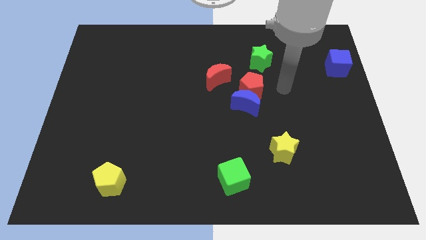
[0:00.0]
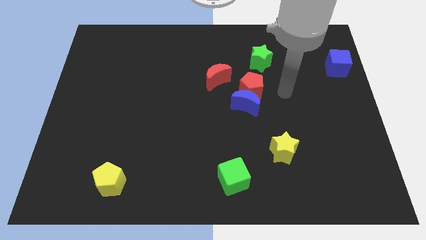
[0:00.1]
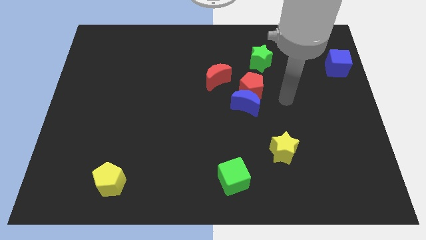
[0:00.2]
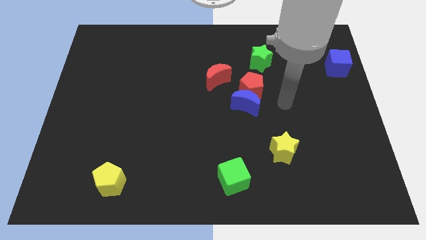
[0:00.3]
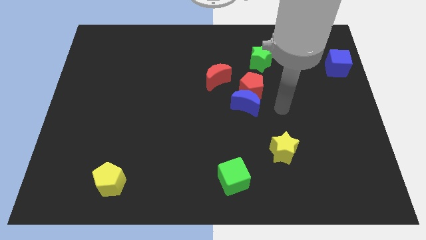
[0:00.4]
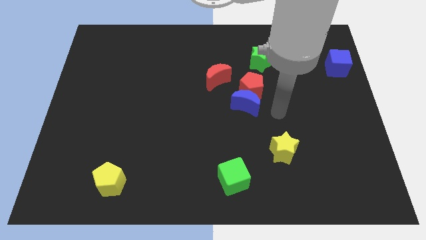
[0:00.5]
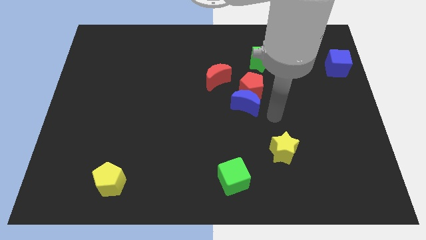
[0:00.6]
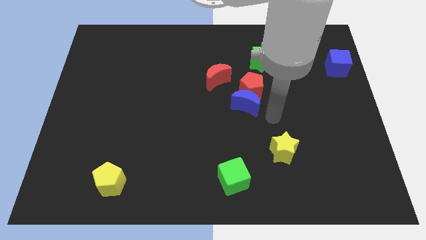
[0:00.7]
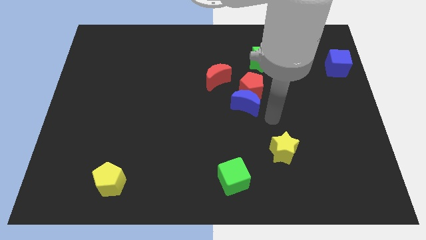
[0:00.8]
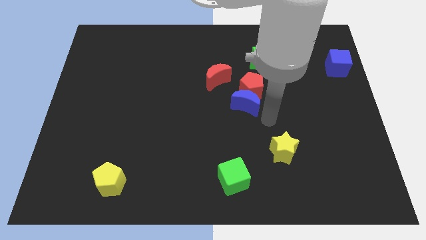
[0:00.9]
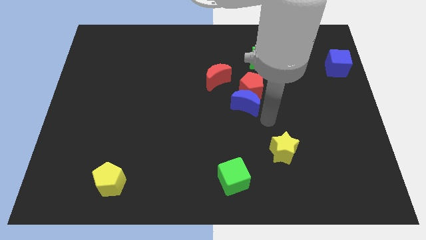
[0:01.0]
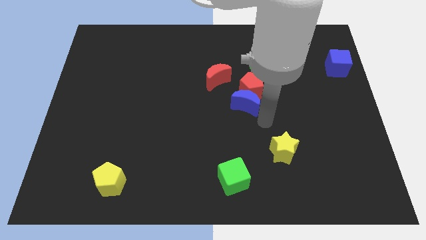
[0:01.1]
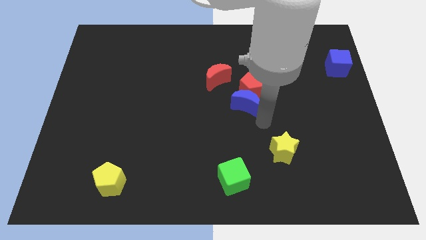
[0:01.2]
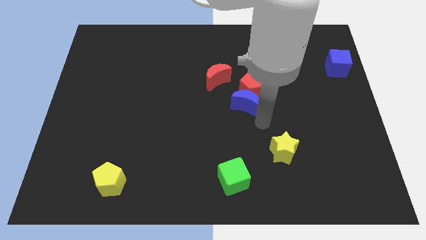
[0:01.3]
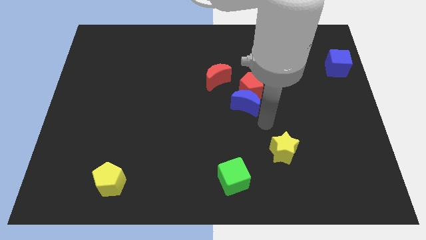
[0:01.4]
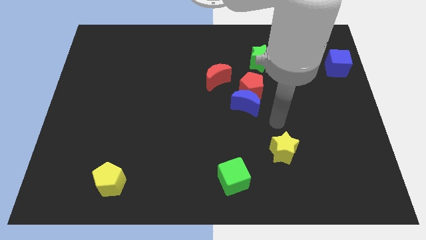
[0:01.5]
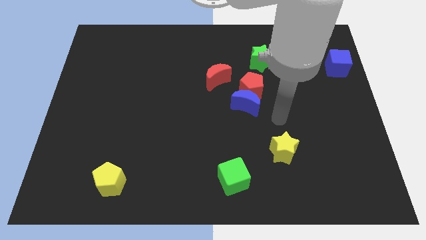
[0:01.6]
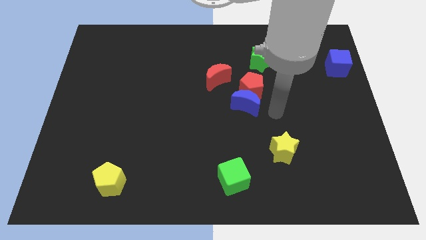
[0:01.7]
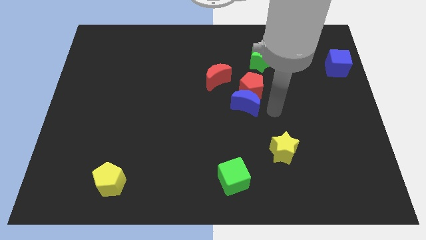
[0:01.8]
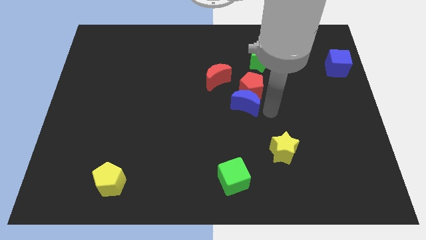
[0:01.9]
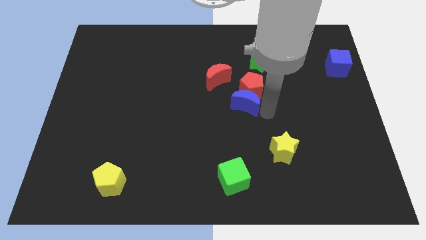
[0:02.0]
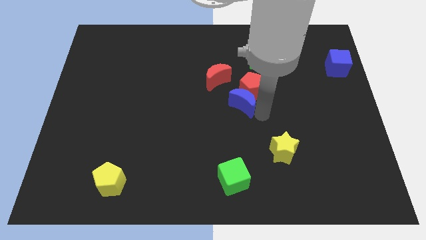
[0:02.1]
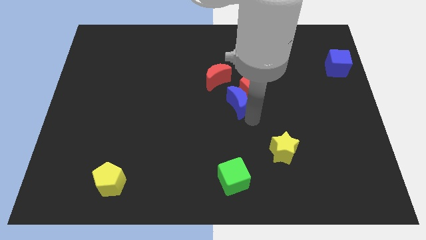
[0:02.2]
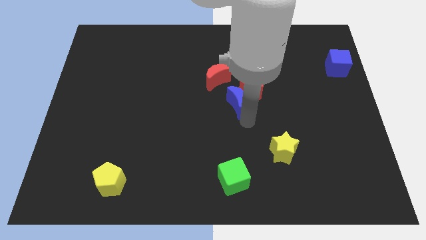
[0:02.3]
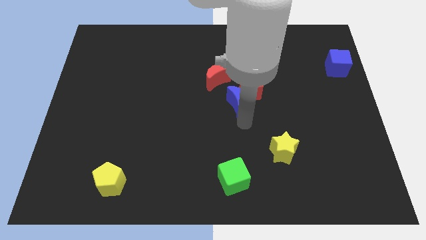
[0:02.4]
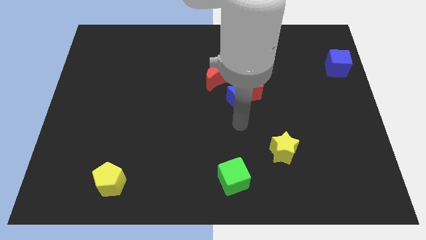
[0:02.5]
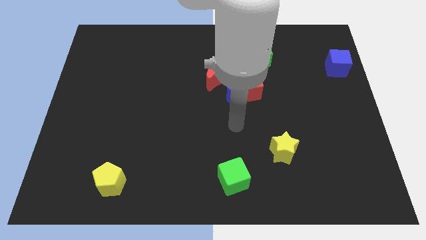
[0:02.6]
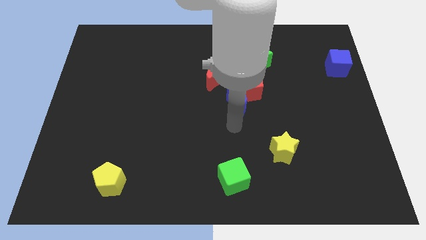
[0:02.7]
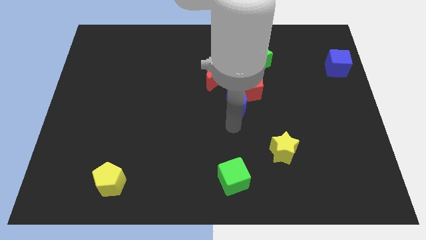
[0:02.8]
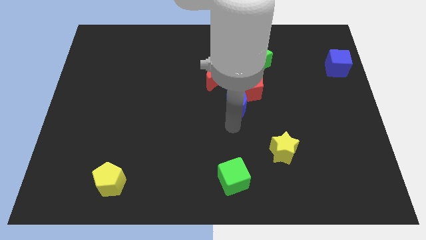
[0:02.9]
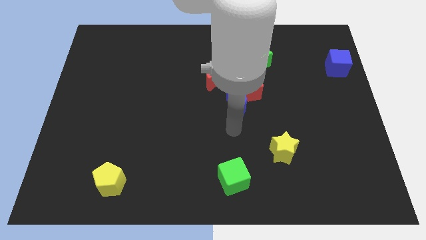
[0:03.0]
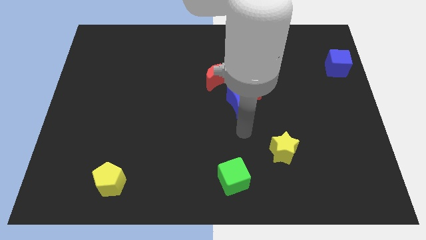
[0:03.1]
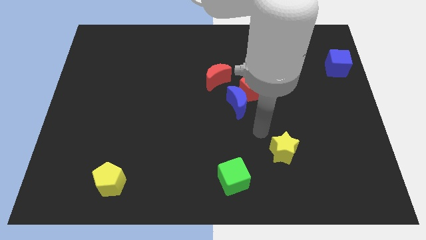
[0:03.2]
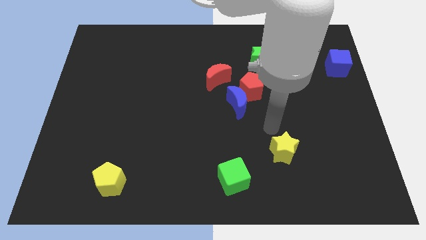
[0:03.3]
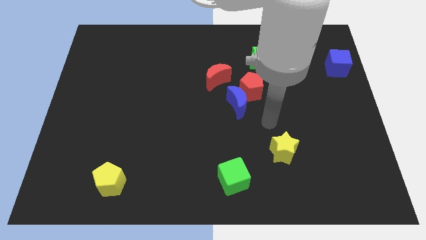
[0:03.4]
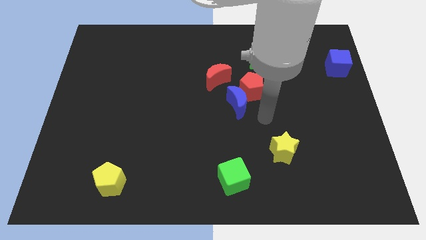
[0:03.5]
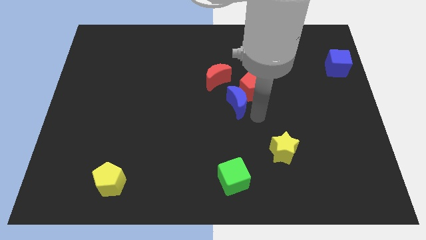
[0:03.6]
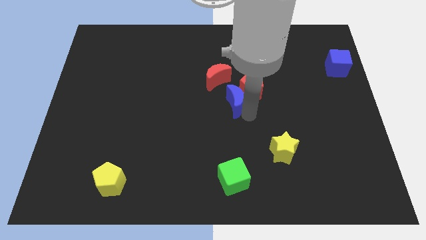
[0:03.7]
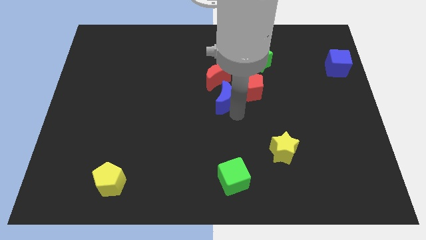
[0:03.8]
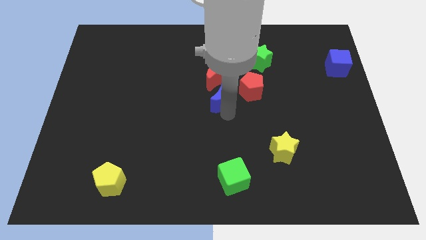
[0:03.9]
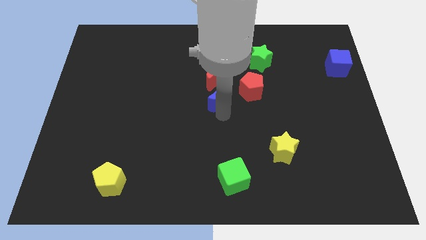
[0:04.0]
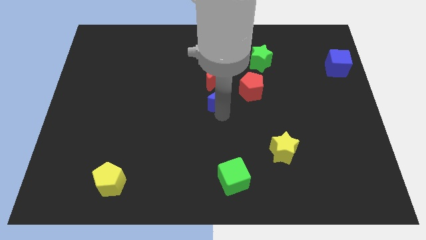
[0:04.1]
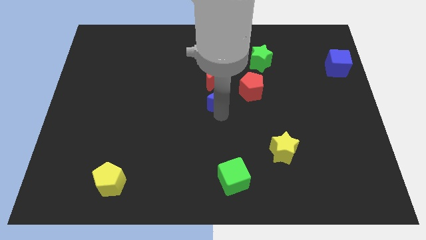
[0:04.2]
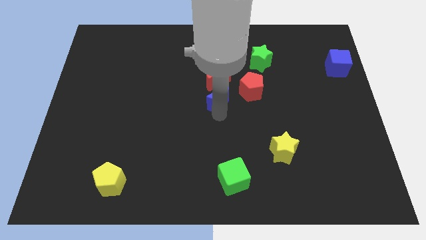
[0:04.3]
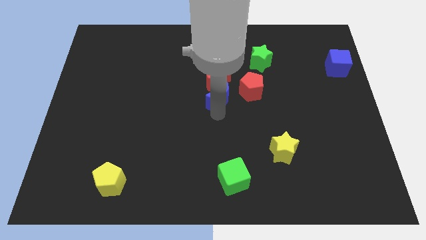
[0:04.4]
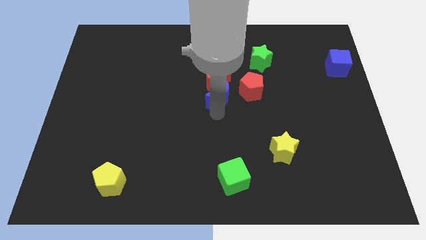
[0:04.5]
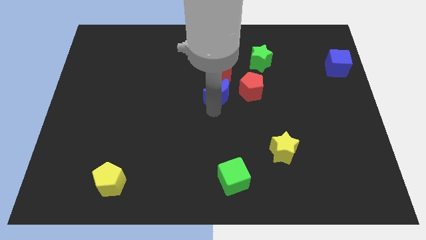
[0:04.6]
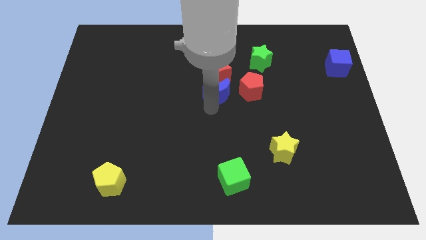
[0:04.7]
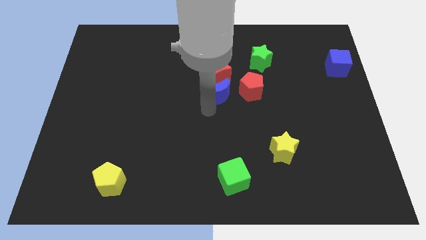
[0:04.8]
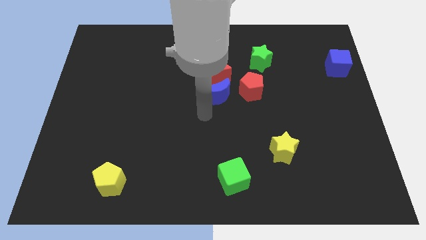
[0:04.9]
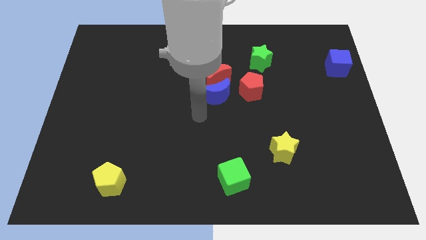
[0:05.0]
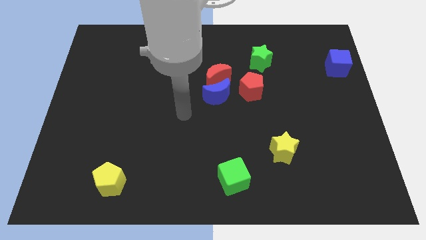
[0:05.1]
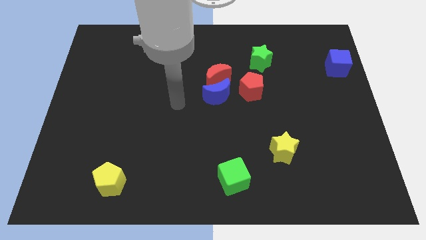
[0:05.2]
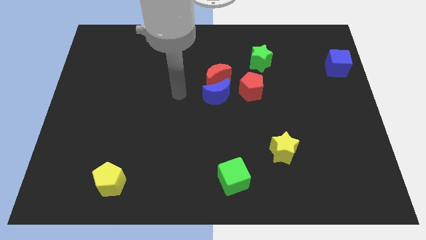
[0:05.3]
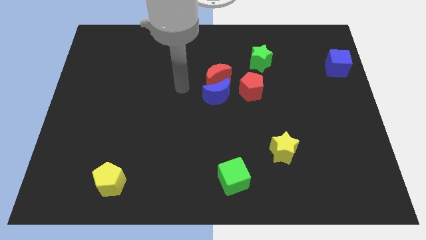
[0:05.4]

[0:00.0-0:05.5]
push the blue crescent close to the red crescent

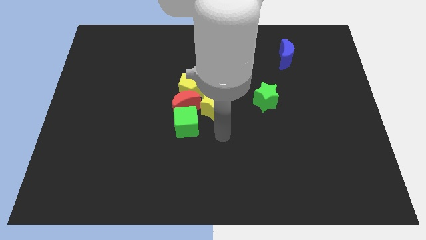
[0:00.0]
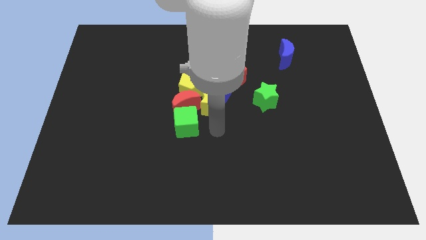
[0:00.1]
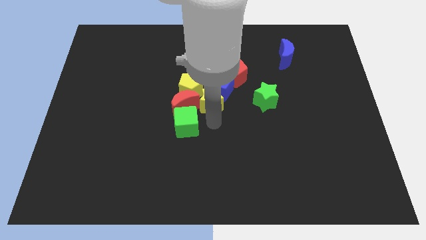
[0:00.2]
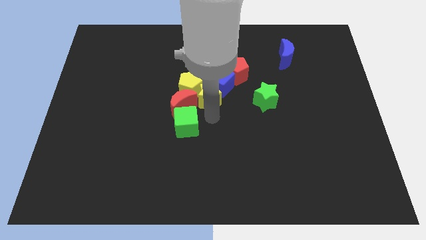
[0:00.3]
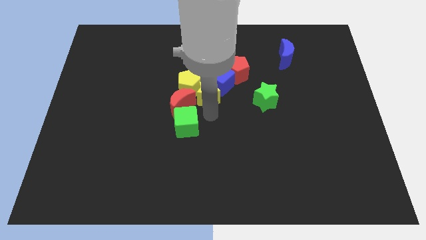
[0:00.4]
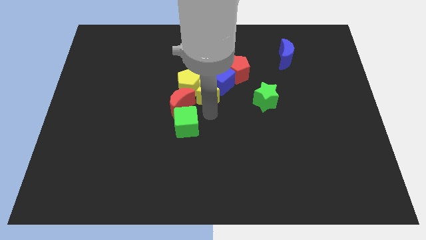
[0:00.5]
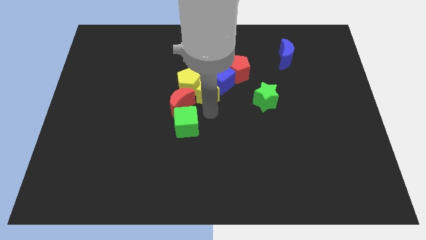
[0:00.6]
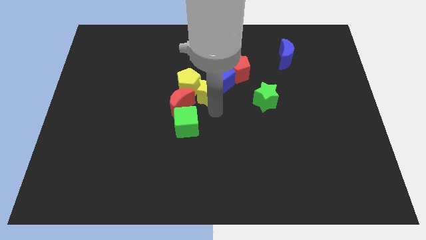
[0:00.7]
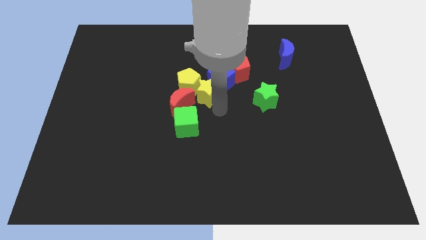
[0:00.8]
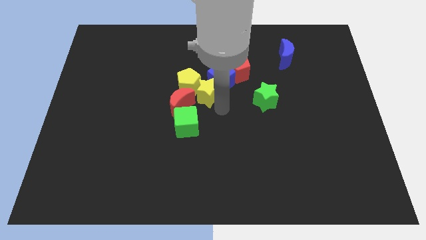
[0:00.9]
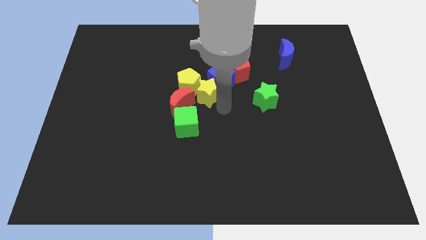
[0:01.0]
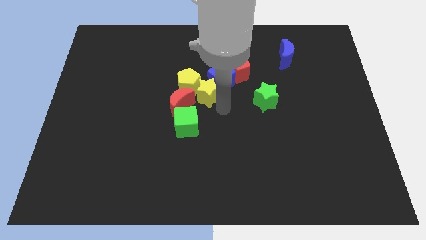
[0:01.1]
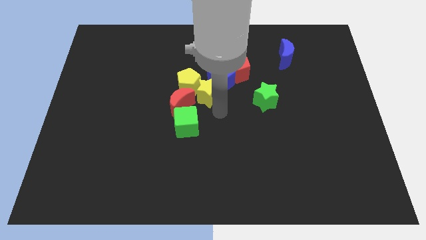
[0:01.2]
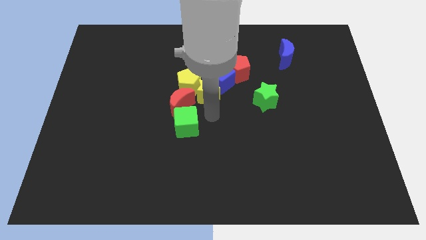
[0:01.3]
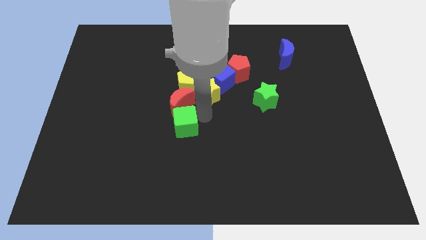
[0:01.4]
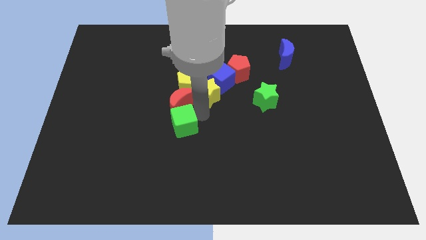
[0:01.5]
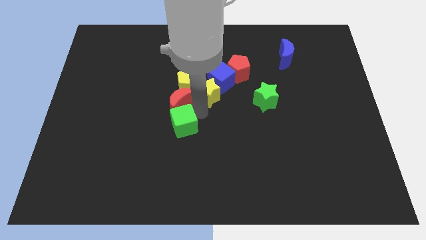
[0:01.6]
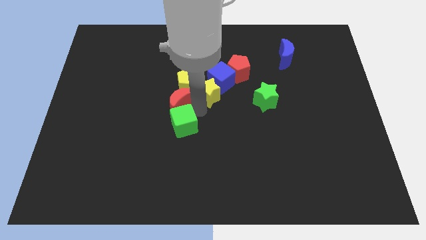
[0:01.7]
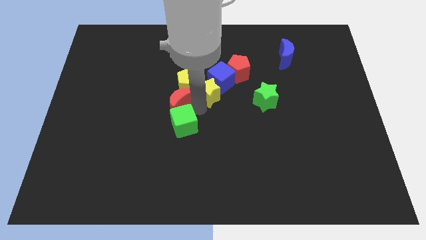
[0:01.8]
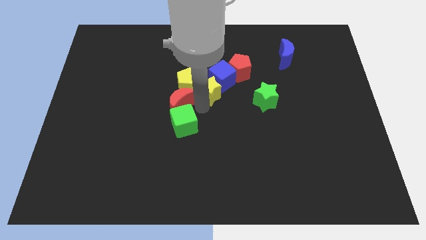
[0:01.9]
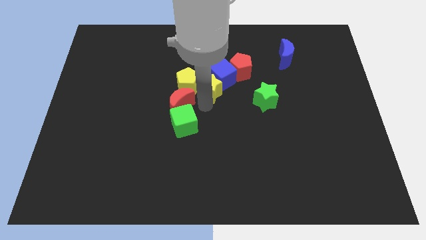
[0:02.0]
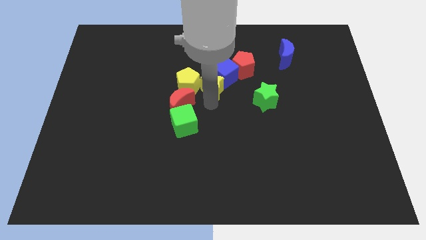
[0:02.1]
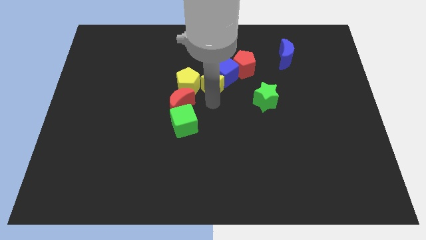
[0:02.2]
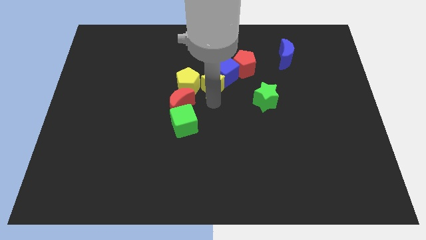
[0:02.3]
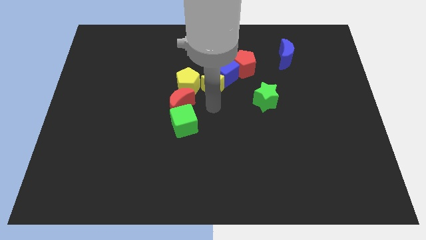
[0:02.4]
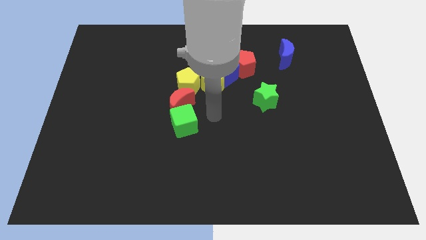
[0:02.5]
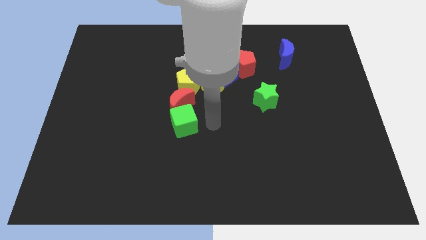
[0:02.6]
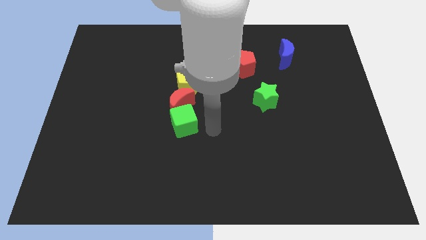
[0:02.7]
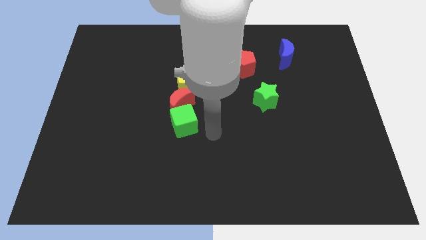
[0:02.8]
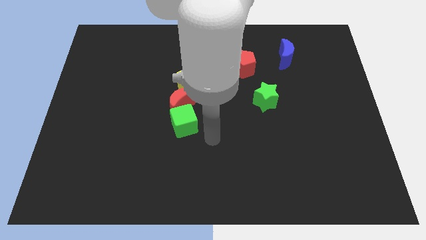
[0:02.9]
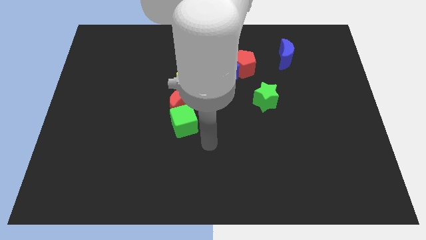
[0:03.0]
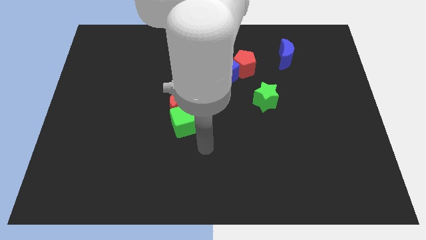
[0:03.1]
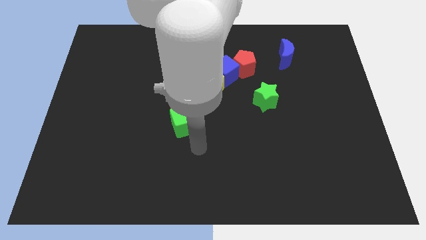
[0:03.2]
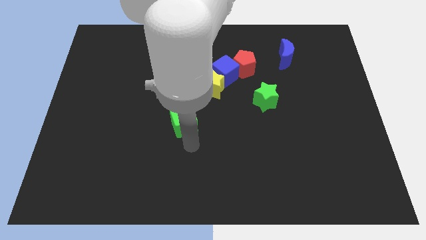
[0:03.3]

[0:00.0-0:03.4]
place the yellow star right to the yellow pentagon
